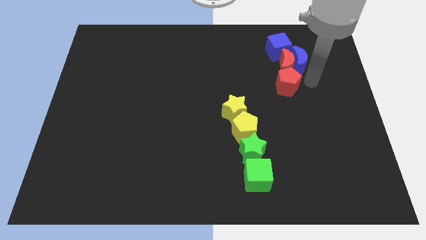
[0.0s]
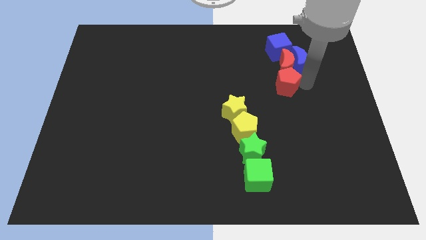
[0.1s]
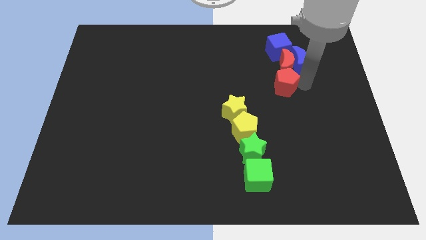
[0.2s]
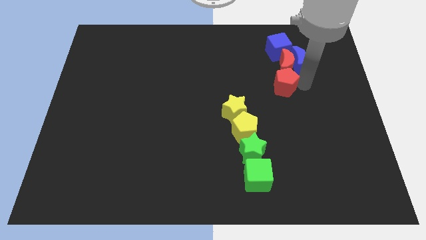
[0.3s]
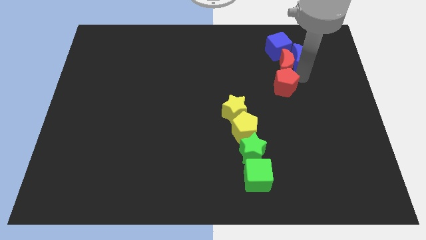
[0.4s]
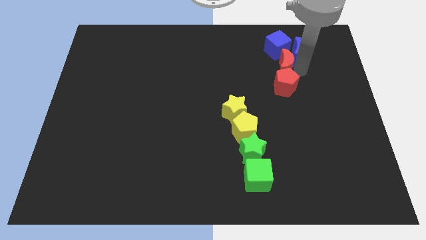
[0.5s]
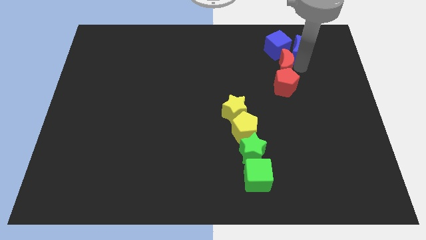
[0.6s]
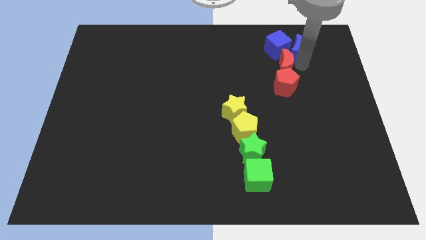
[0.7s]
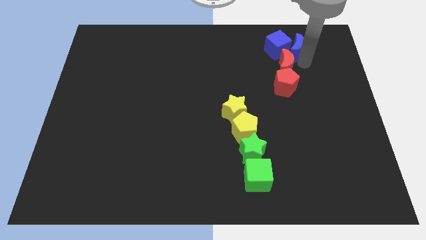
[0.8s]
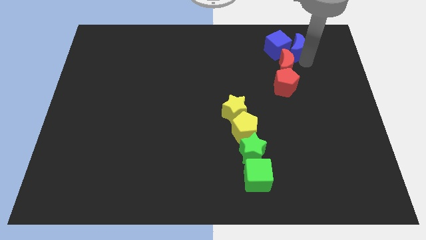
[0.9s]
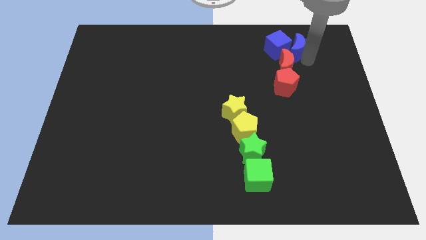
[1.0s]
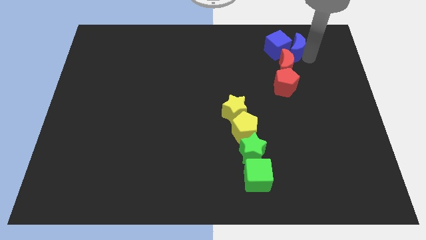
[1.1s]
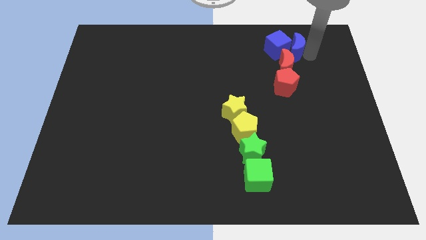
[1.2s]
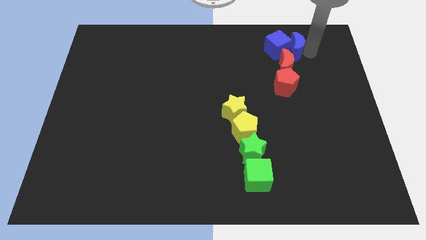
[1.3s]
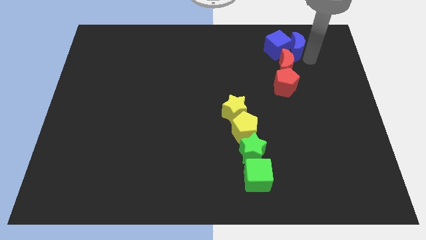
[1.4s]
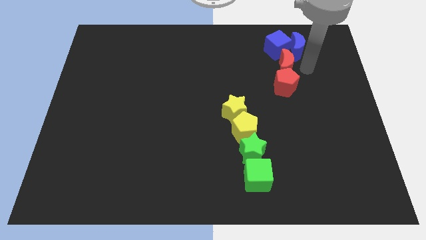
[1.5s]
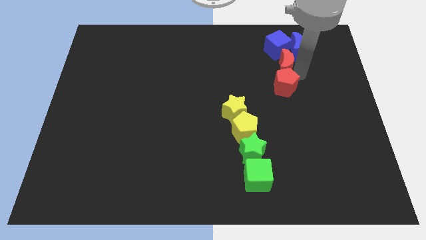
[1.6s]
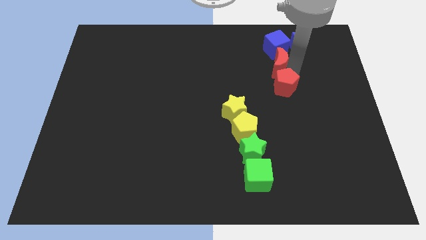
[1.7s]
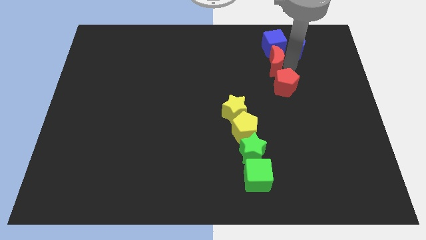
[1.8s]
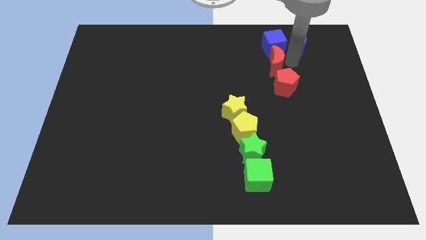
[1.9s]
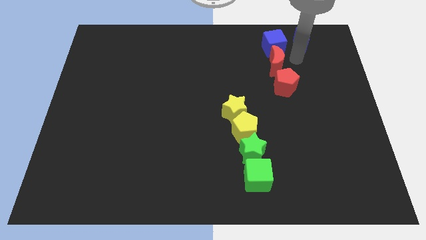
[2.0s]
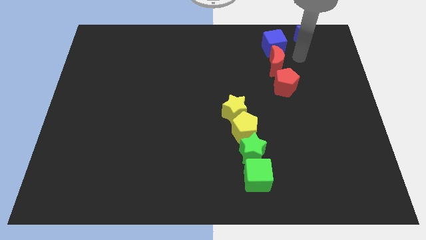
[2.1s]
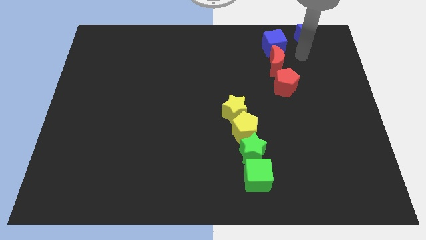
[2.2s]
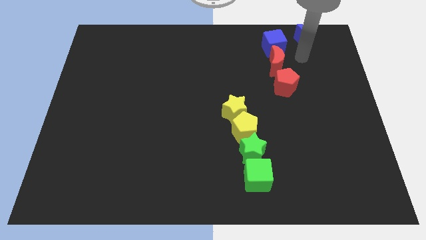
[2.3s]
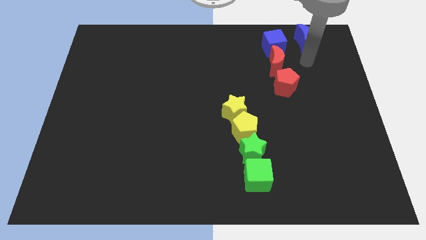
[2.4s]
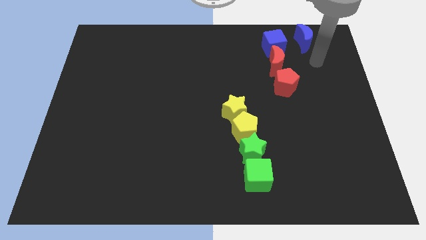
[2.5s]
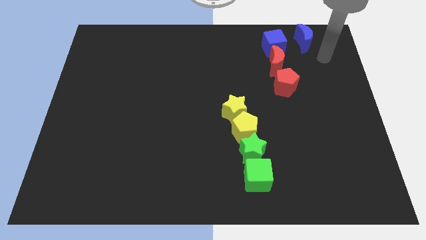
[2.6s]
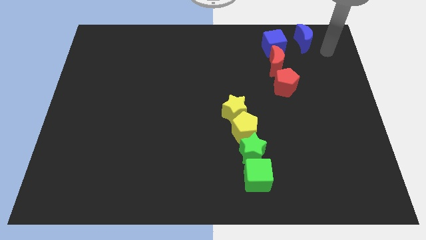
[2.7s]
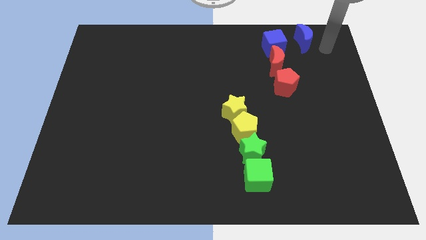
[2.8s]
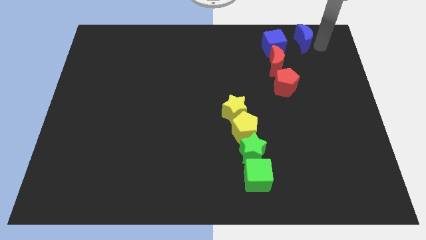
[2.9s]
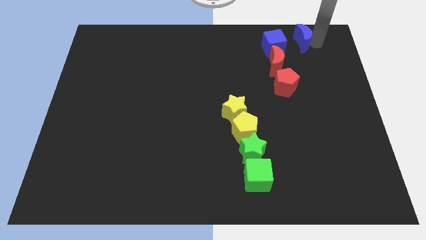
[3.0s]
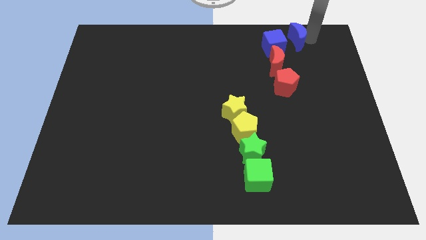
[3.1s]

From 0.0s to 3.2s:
move the blue moon upwards

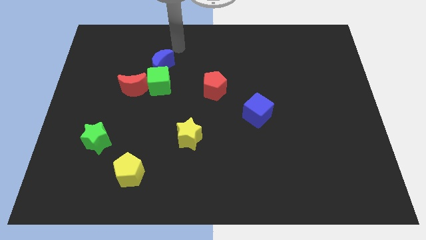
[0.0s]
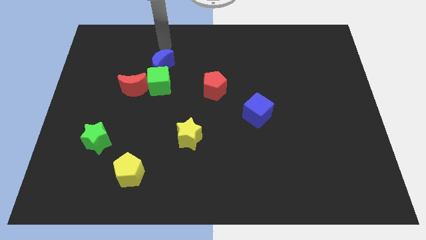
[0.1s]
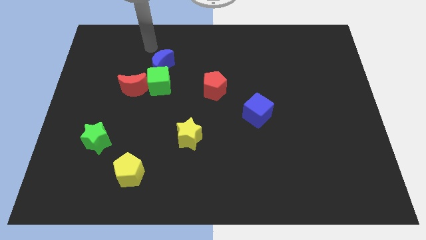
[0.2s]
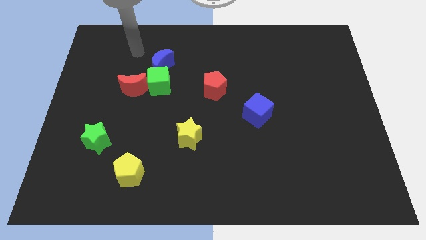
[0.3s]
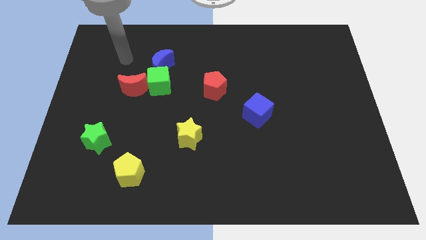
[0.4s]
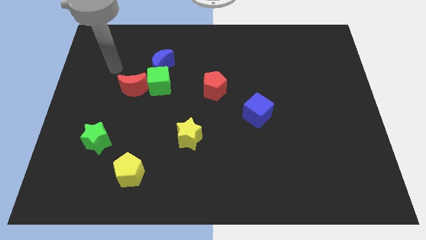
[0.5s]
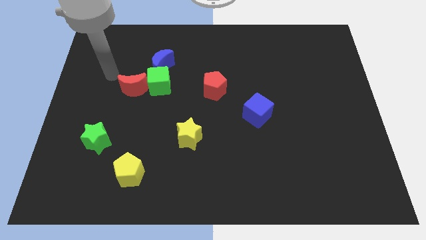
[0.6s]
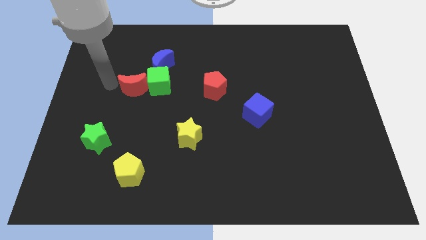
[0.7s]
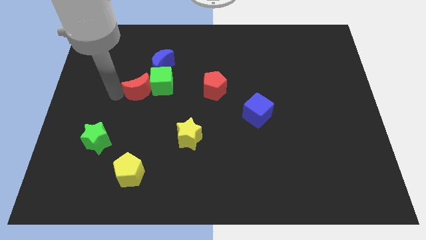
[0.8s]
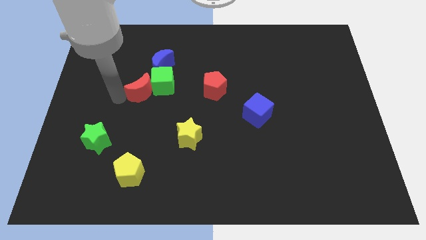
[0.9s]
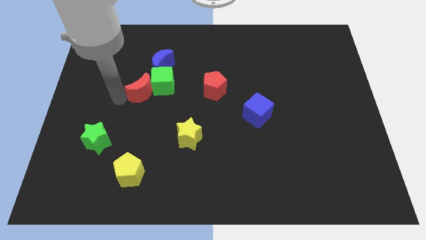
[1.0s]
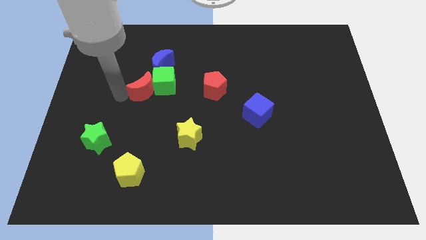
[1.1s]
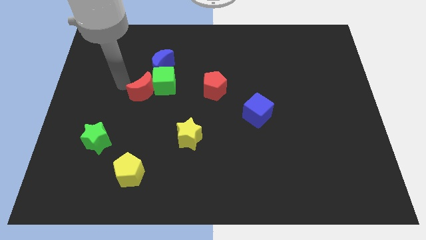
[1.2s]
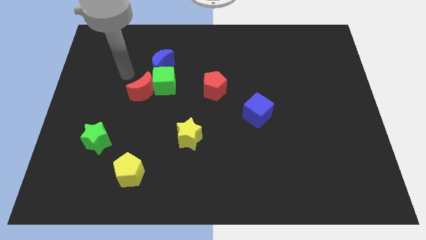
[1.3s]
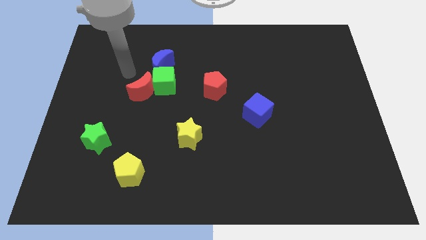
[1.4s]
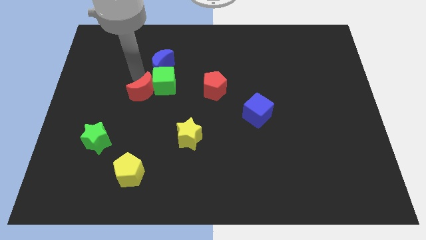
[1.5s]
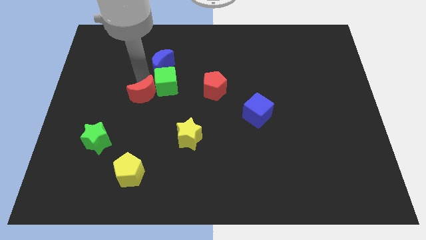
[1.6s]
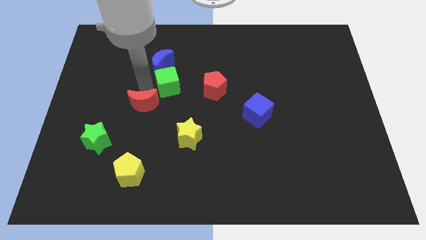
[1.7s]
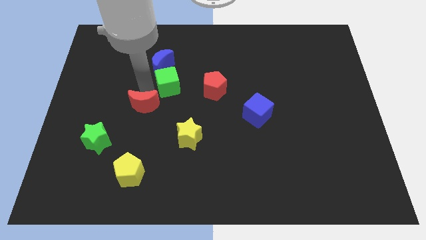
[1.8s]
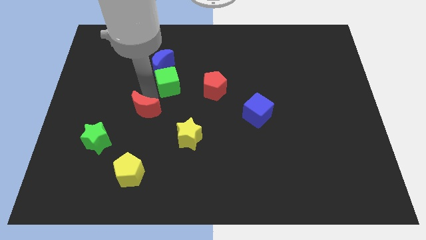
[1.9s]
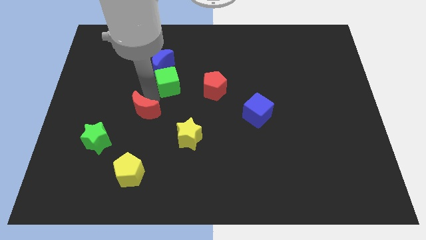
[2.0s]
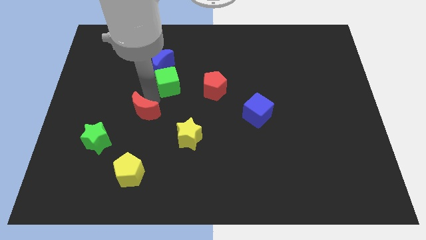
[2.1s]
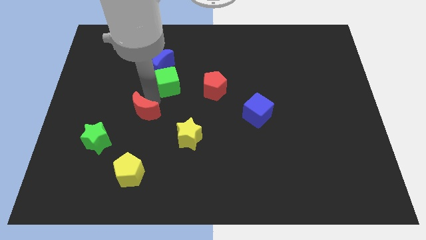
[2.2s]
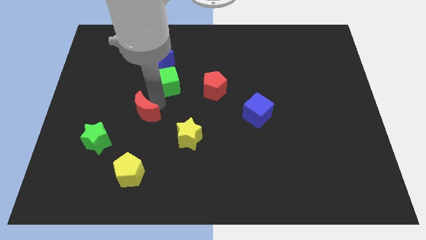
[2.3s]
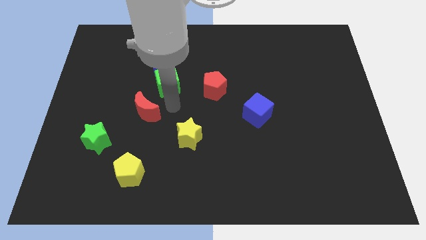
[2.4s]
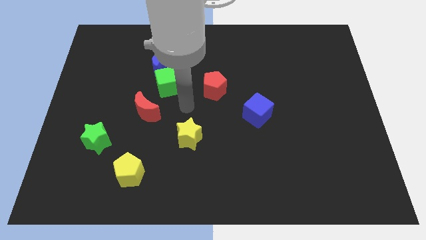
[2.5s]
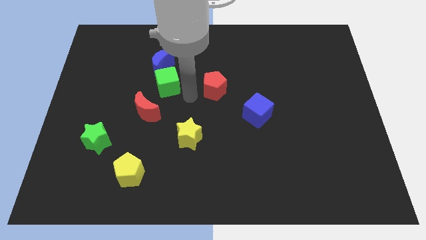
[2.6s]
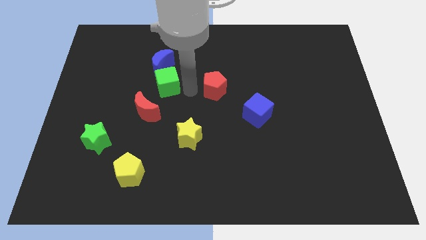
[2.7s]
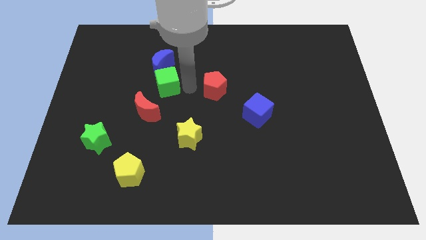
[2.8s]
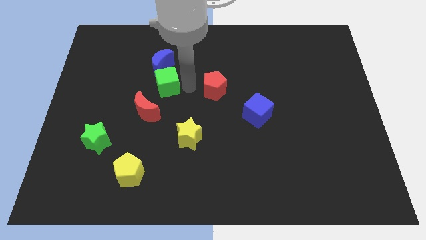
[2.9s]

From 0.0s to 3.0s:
move the red crescent to the top left side of the yellow star

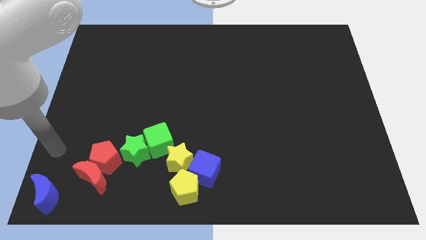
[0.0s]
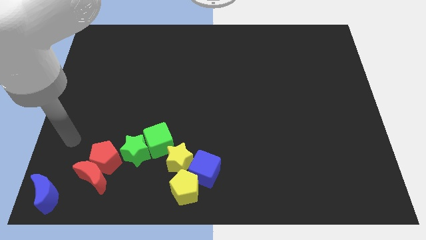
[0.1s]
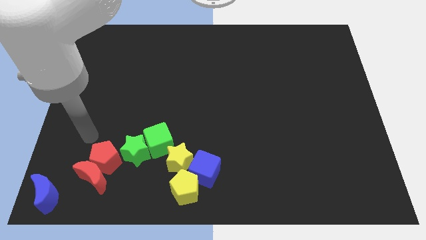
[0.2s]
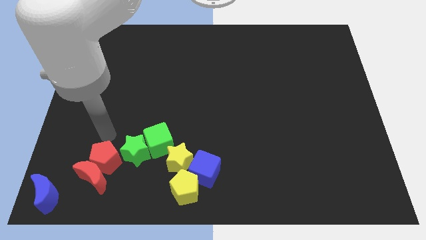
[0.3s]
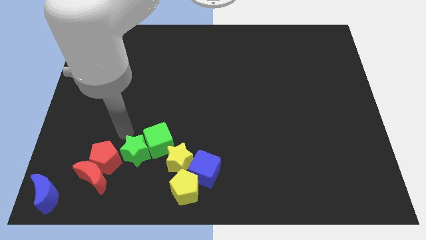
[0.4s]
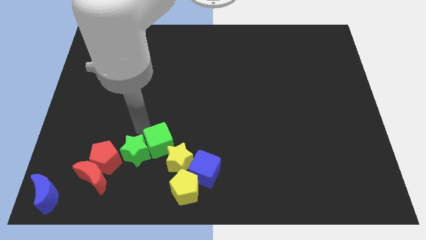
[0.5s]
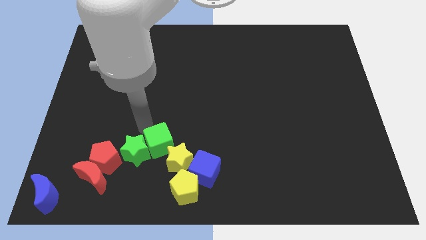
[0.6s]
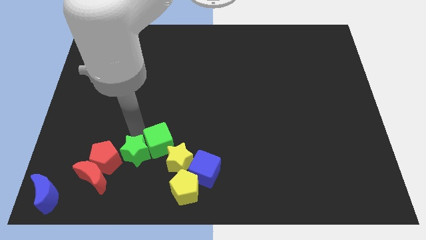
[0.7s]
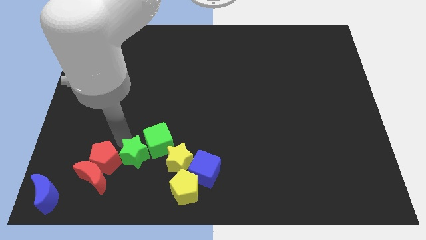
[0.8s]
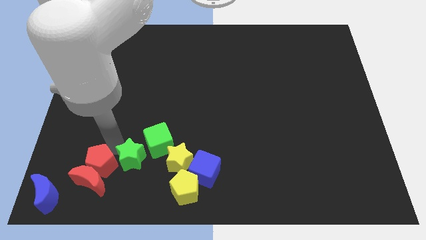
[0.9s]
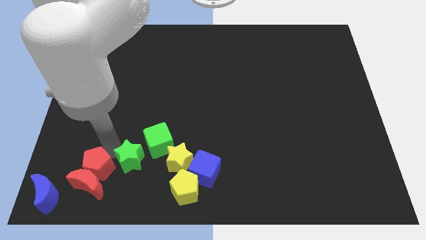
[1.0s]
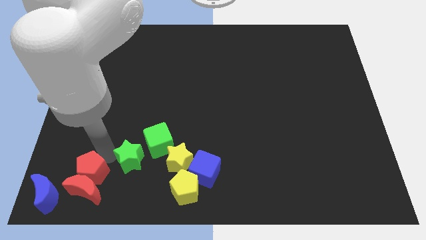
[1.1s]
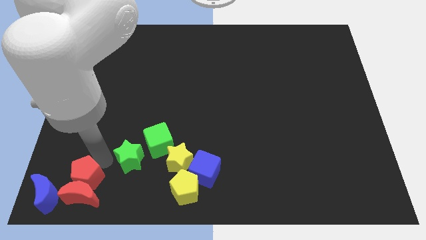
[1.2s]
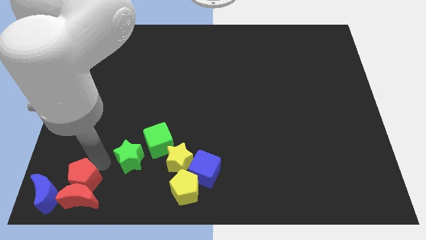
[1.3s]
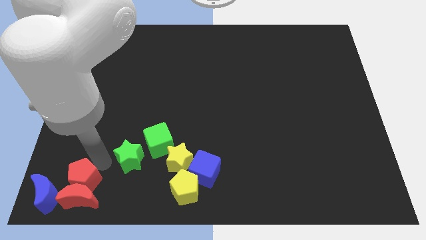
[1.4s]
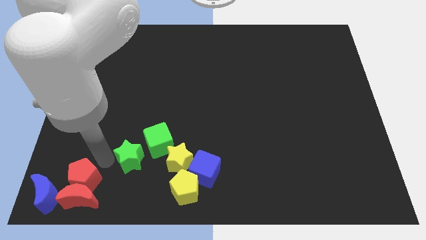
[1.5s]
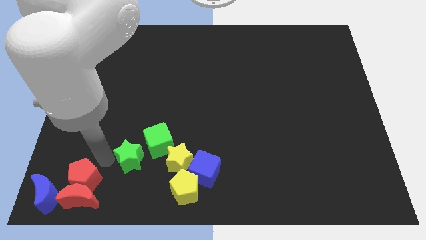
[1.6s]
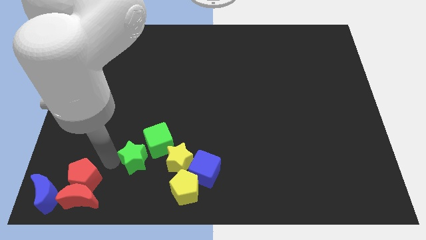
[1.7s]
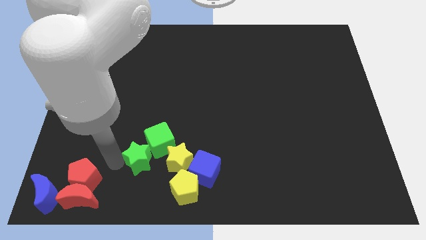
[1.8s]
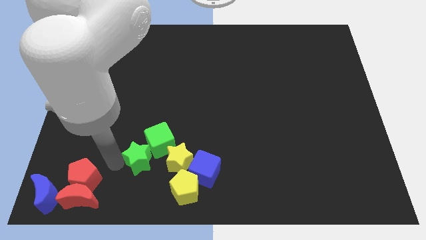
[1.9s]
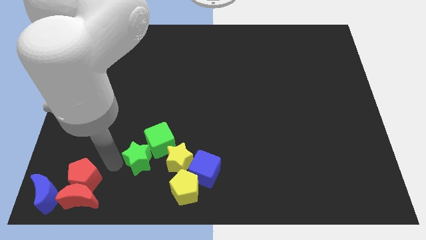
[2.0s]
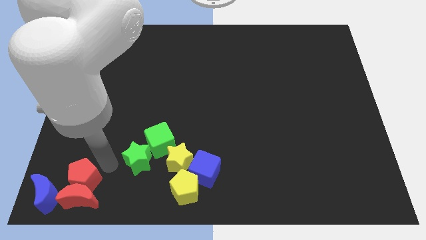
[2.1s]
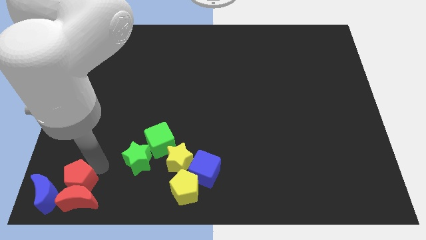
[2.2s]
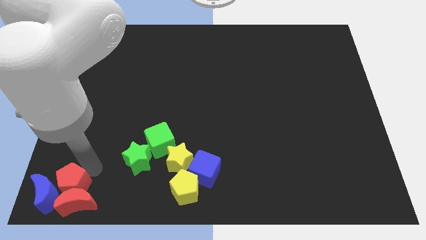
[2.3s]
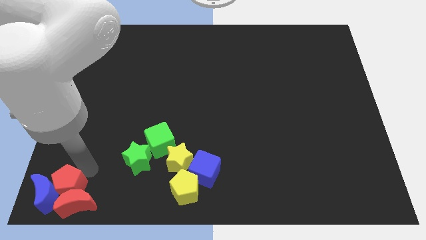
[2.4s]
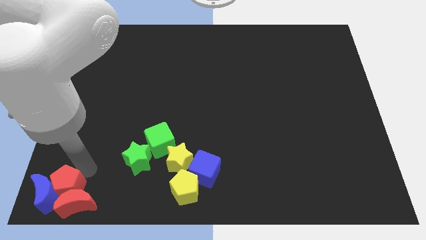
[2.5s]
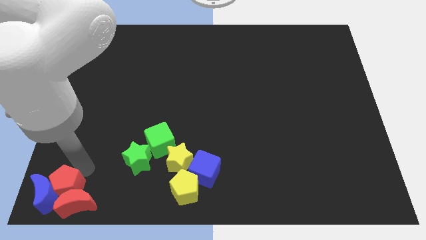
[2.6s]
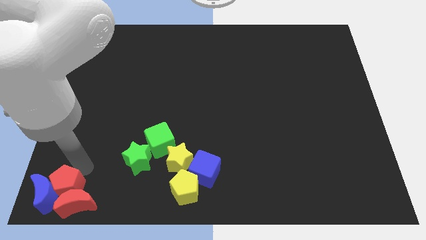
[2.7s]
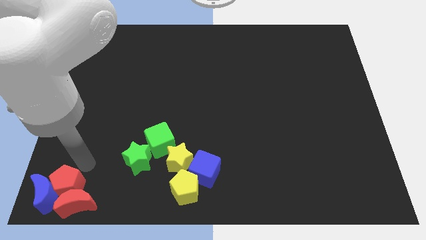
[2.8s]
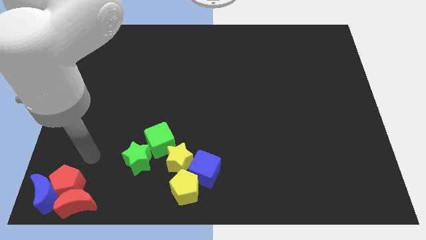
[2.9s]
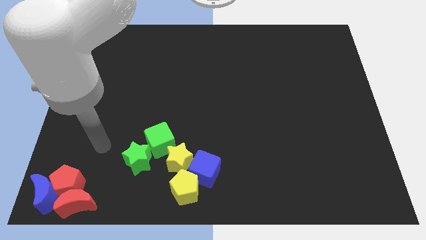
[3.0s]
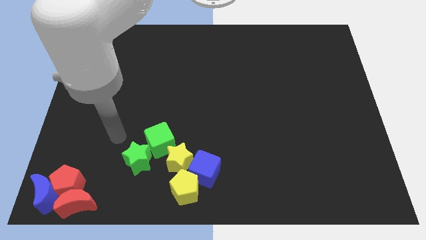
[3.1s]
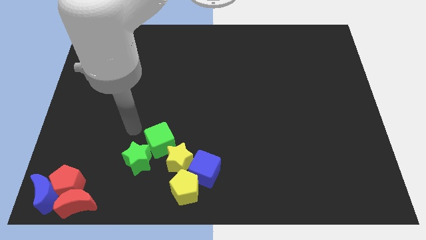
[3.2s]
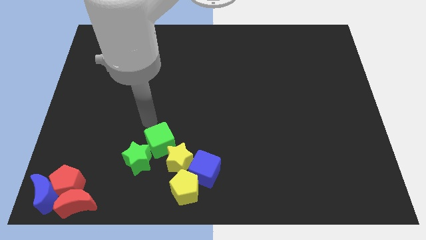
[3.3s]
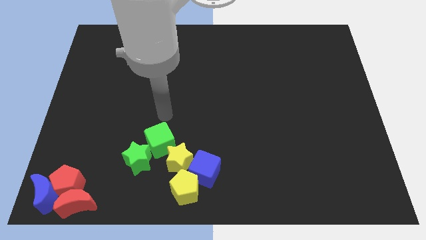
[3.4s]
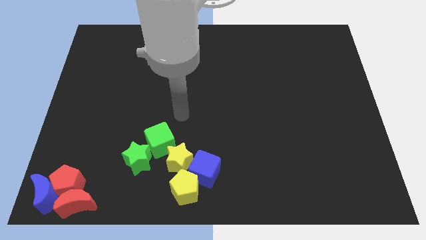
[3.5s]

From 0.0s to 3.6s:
move the red pentagon along with red crescent into the blue crescent
